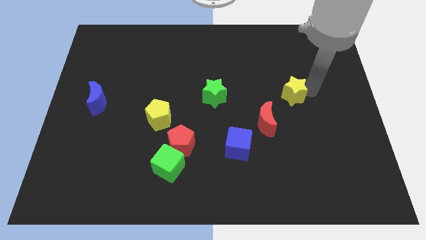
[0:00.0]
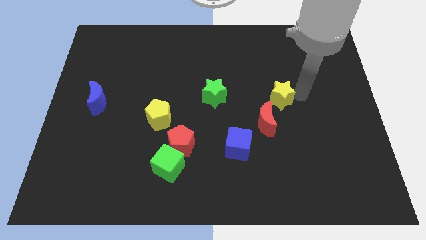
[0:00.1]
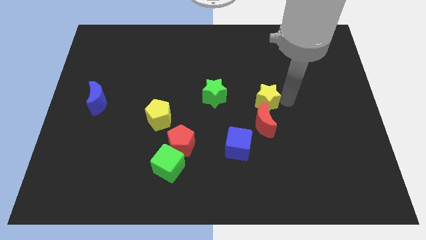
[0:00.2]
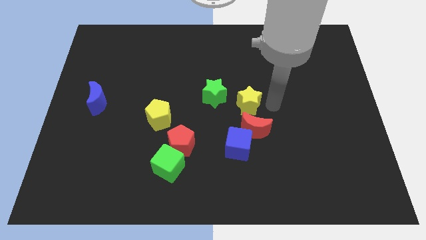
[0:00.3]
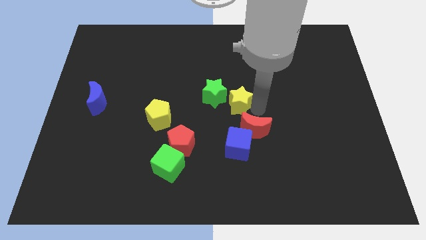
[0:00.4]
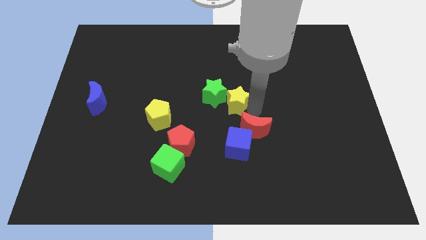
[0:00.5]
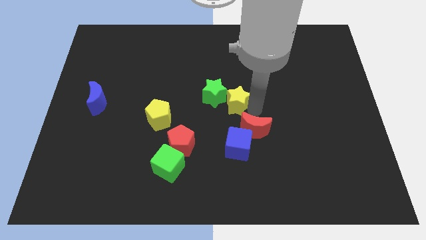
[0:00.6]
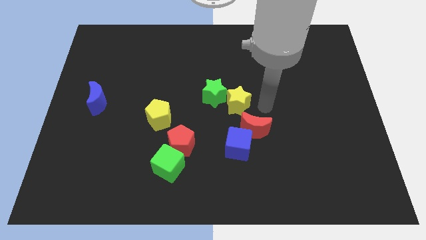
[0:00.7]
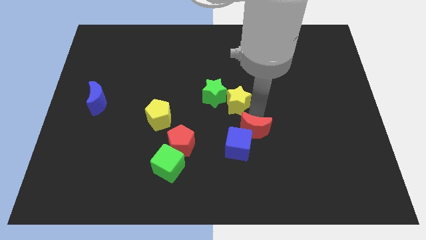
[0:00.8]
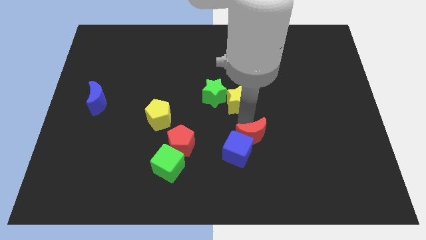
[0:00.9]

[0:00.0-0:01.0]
push the yellow star to the right of the green star

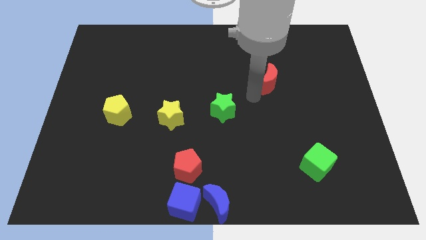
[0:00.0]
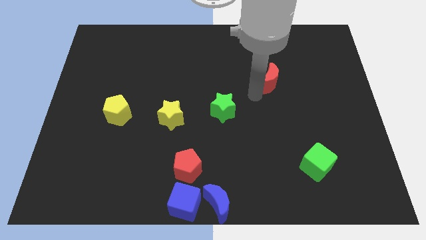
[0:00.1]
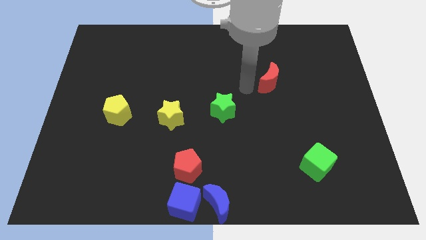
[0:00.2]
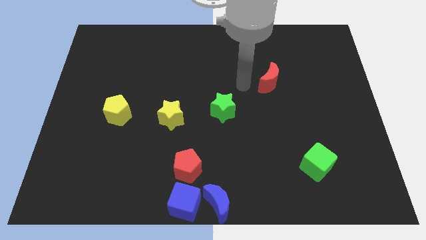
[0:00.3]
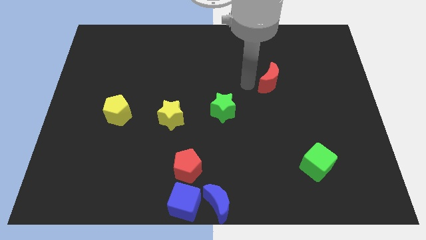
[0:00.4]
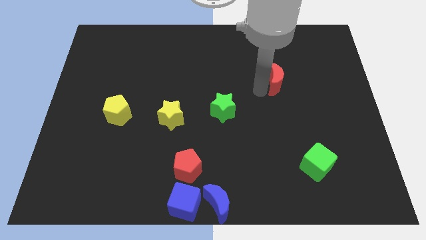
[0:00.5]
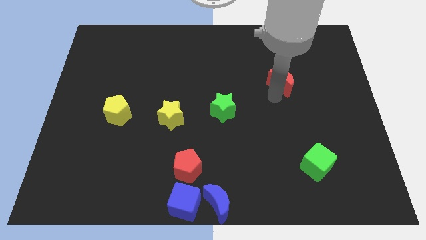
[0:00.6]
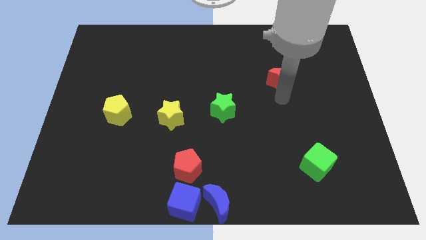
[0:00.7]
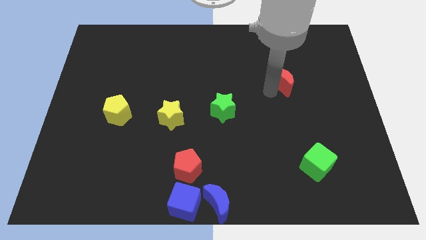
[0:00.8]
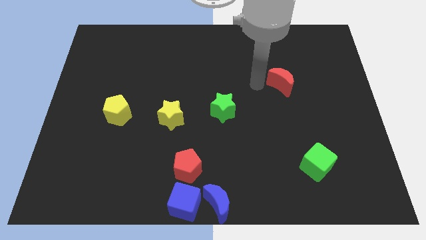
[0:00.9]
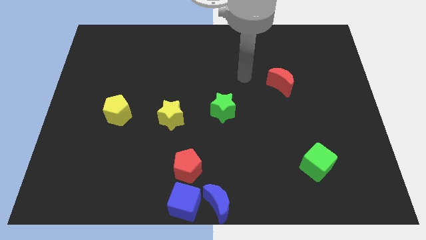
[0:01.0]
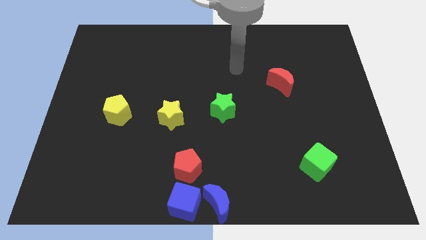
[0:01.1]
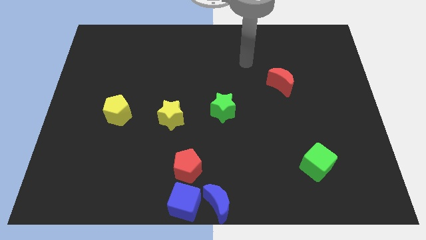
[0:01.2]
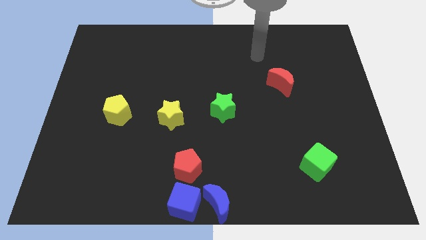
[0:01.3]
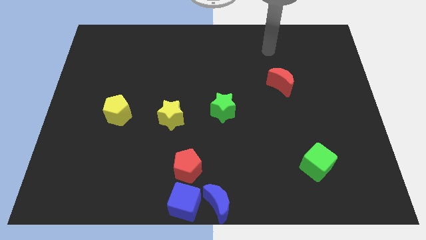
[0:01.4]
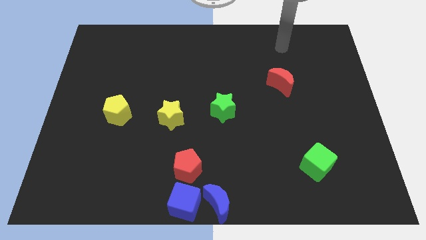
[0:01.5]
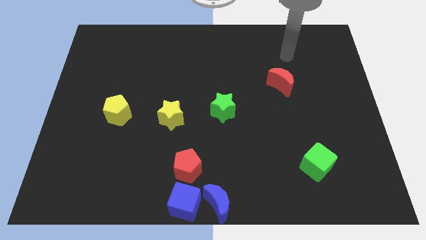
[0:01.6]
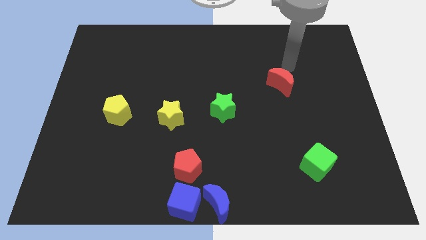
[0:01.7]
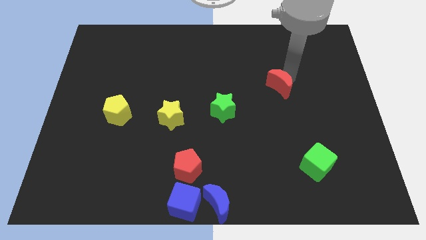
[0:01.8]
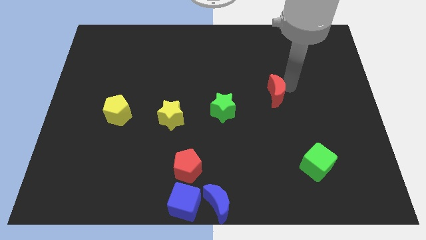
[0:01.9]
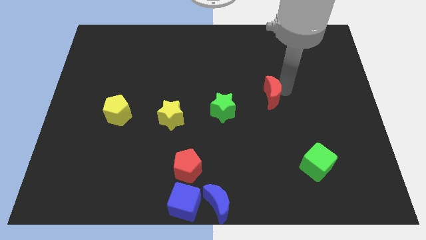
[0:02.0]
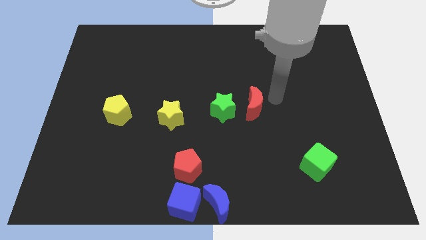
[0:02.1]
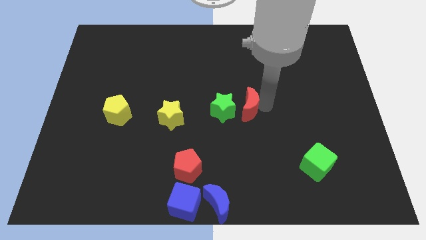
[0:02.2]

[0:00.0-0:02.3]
push the red crescent towards the green star

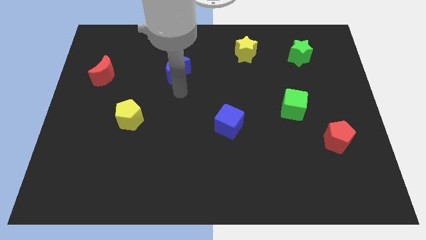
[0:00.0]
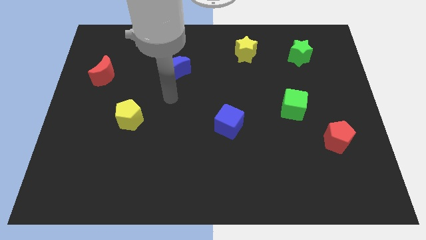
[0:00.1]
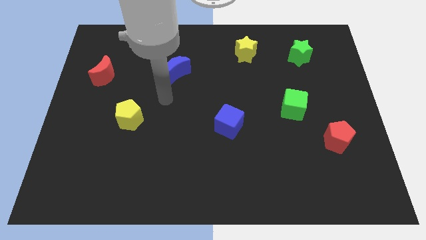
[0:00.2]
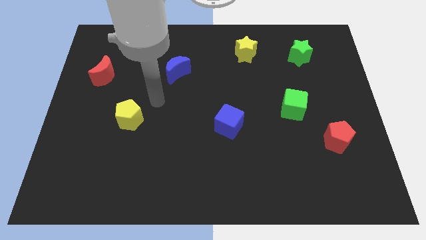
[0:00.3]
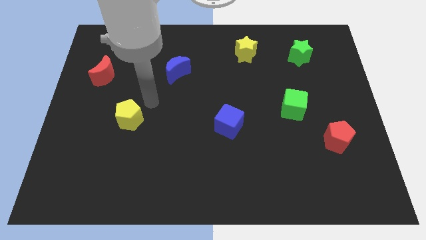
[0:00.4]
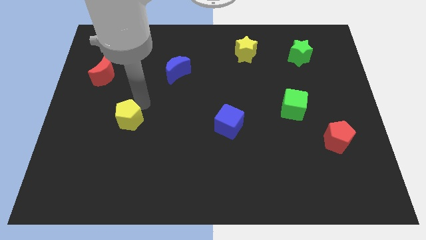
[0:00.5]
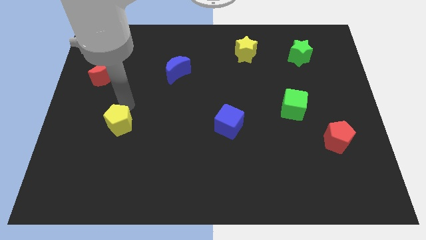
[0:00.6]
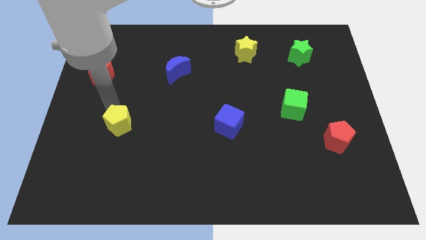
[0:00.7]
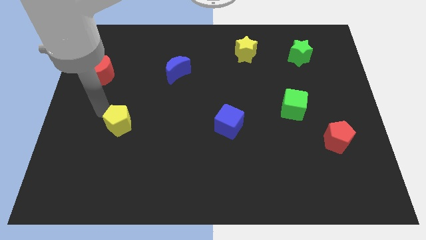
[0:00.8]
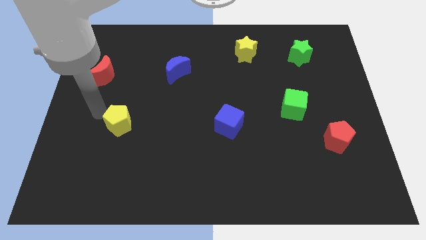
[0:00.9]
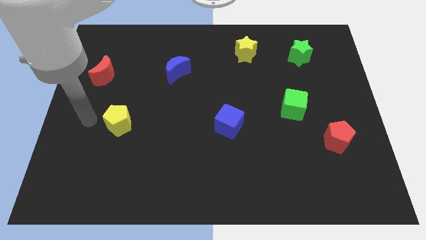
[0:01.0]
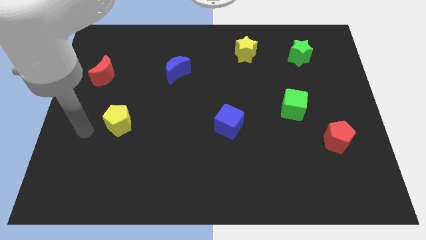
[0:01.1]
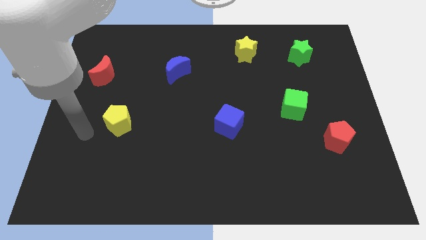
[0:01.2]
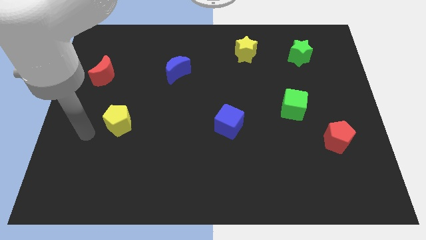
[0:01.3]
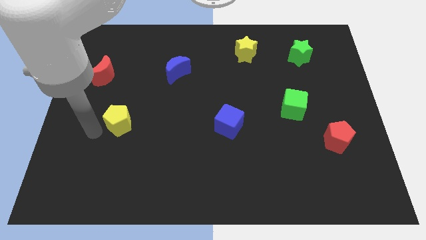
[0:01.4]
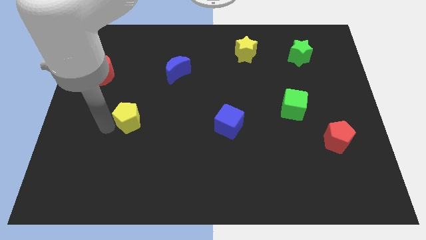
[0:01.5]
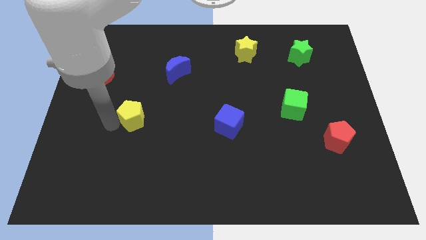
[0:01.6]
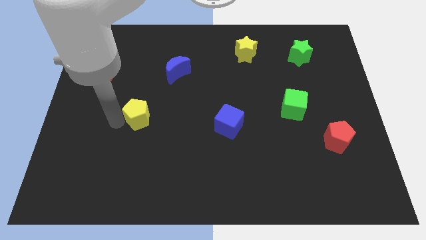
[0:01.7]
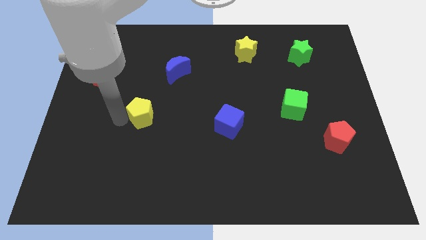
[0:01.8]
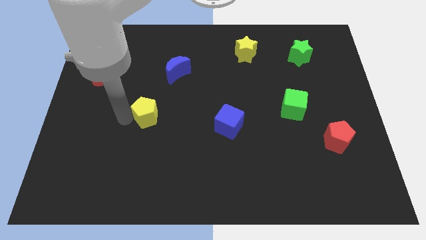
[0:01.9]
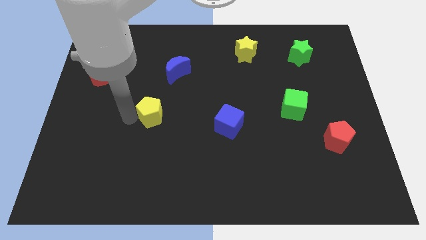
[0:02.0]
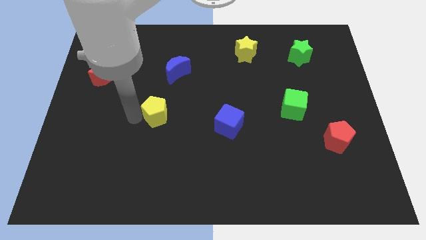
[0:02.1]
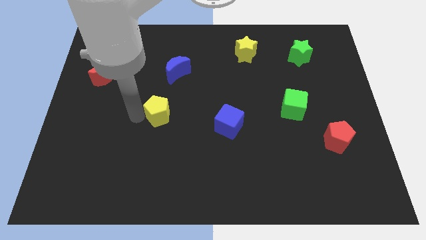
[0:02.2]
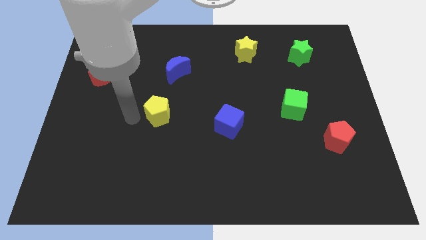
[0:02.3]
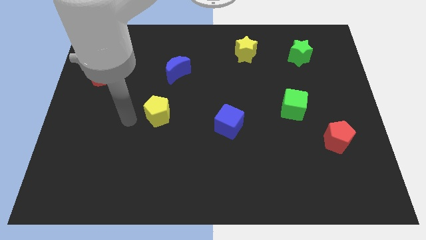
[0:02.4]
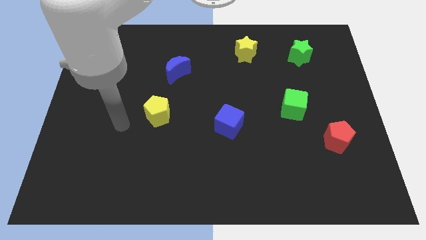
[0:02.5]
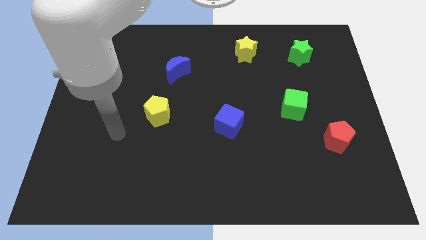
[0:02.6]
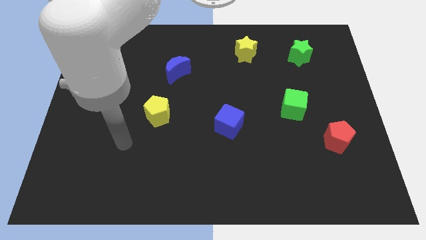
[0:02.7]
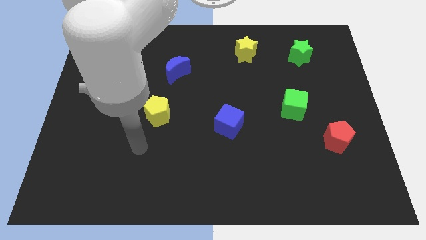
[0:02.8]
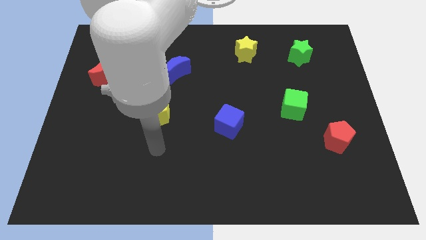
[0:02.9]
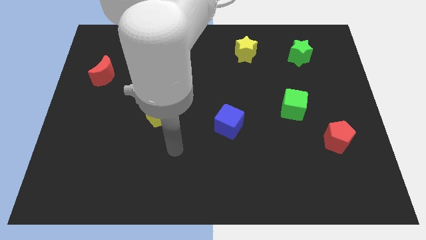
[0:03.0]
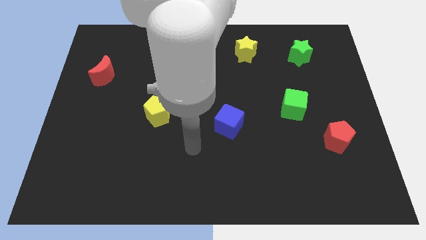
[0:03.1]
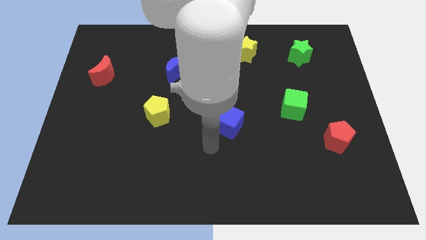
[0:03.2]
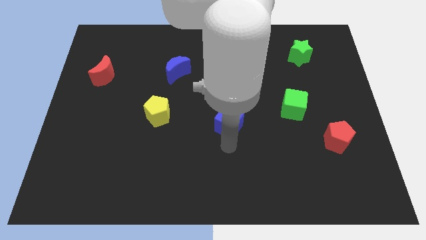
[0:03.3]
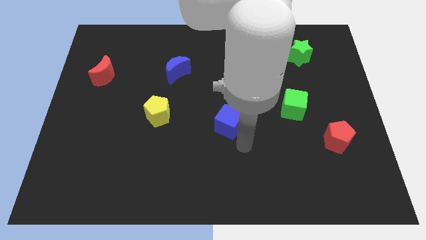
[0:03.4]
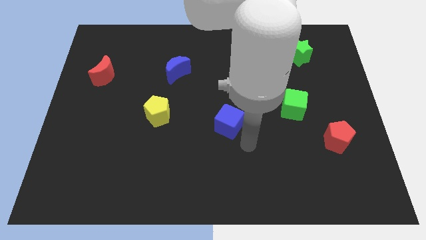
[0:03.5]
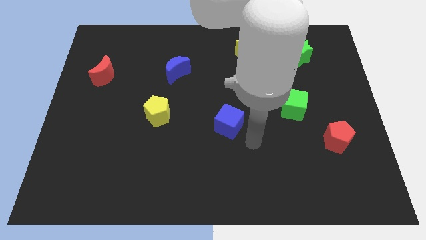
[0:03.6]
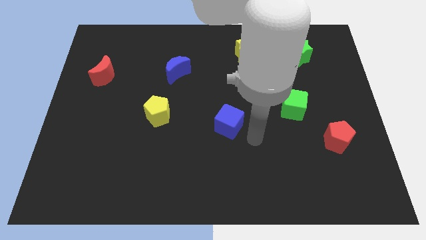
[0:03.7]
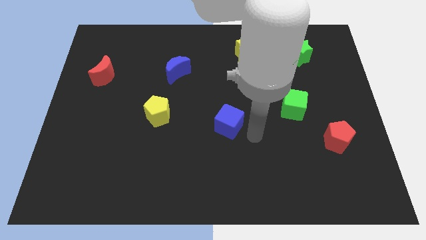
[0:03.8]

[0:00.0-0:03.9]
place the yellow pentagon diagonally bottom right red moon

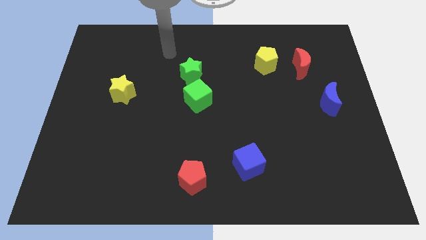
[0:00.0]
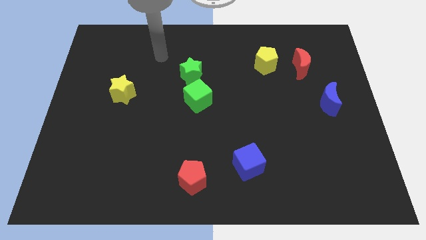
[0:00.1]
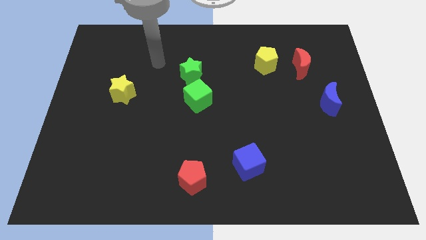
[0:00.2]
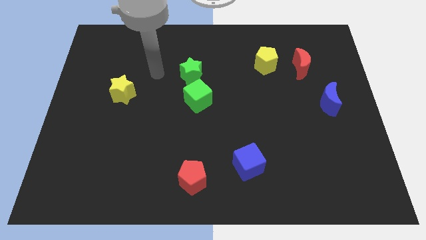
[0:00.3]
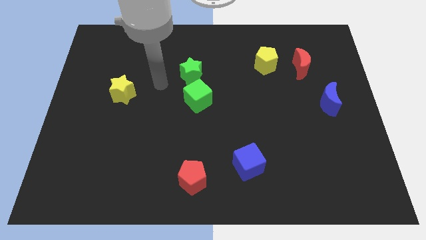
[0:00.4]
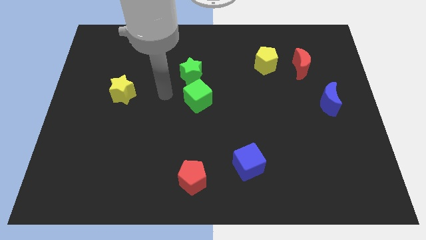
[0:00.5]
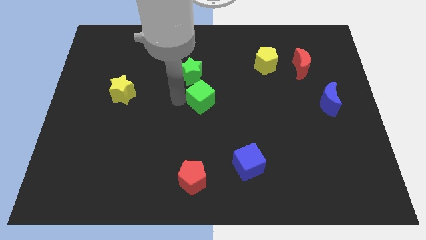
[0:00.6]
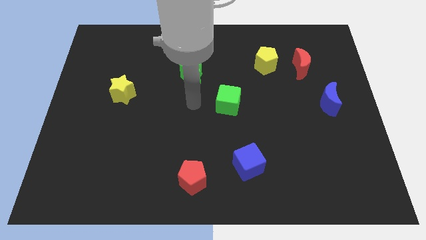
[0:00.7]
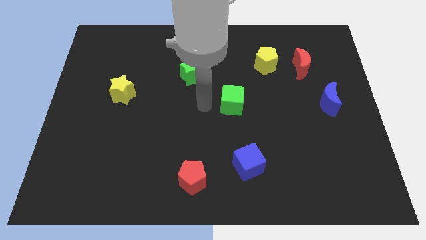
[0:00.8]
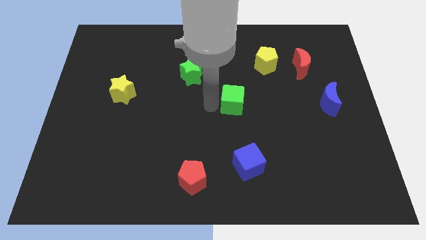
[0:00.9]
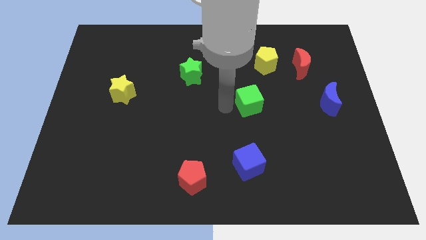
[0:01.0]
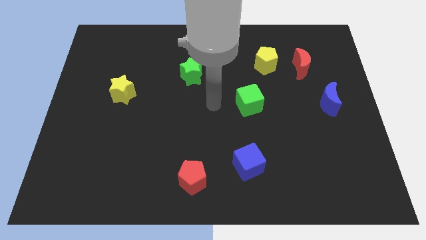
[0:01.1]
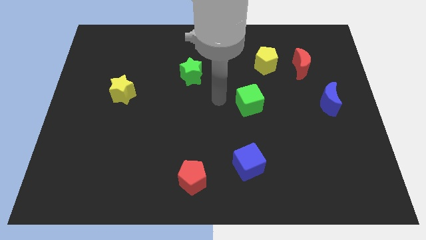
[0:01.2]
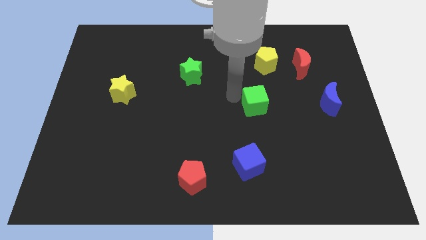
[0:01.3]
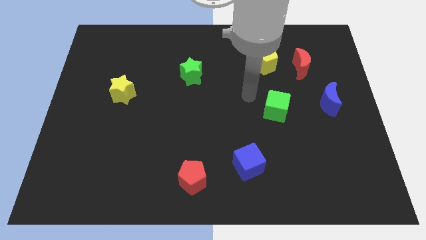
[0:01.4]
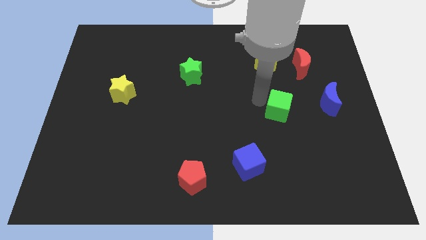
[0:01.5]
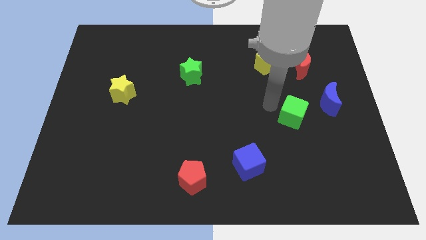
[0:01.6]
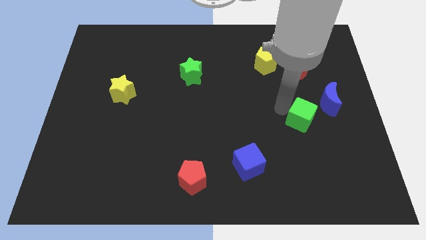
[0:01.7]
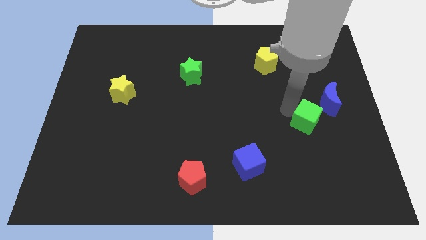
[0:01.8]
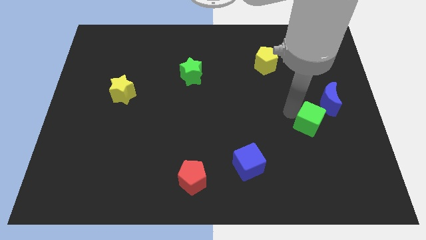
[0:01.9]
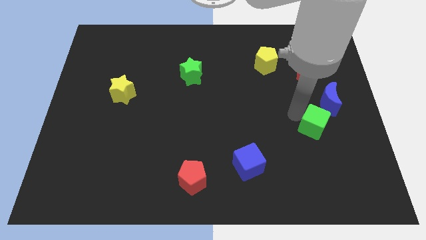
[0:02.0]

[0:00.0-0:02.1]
place green cube to the bottom left of blue moon
